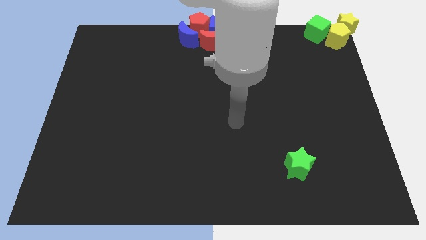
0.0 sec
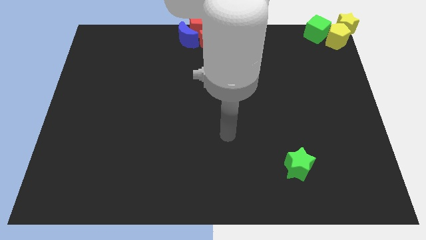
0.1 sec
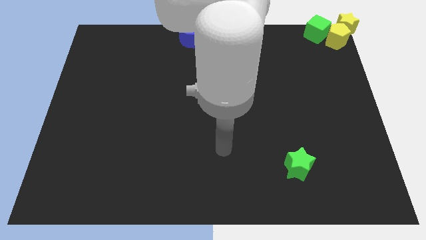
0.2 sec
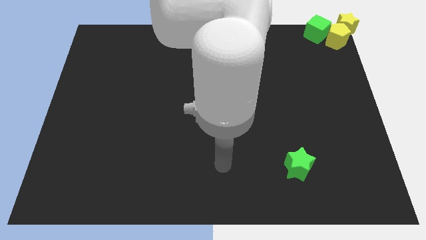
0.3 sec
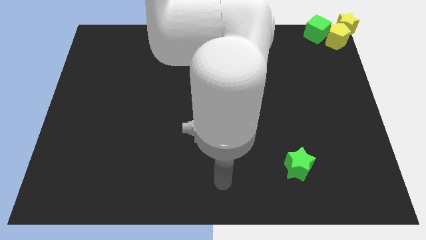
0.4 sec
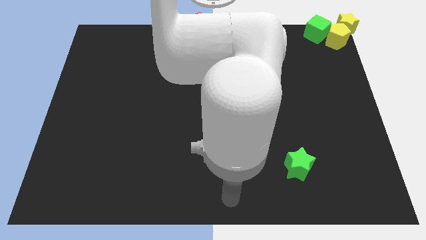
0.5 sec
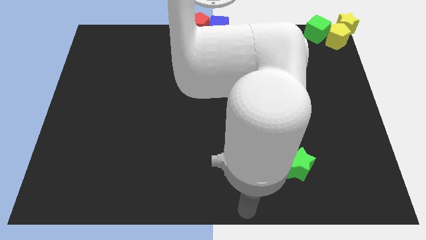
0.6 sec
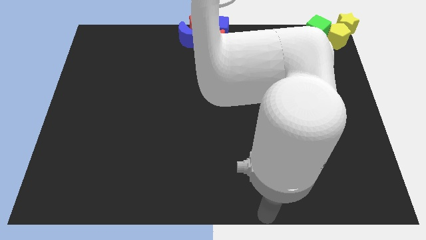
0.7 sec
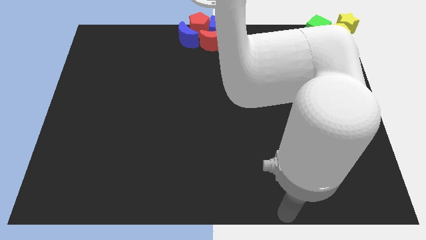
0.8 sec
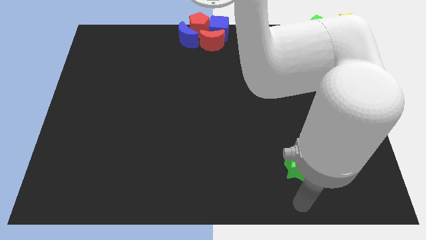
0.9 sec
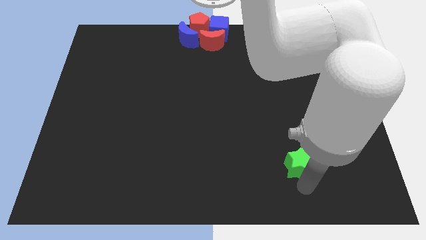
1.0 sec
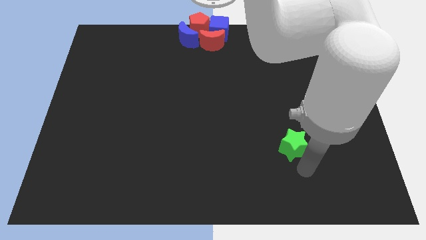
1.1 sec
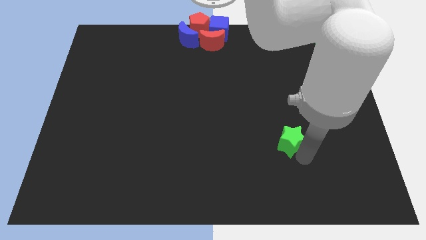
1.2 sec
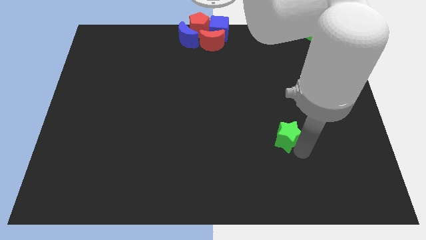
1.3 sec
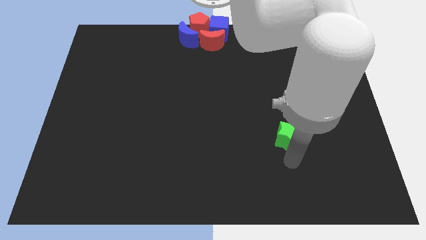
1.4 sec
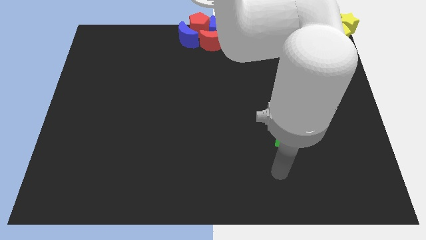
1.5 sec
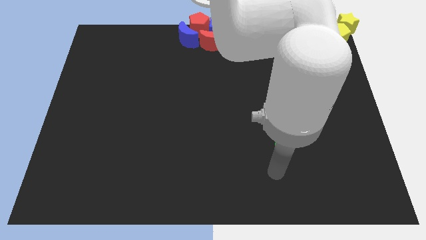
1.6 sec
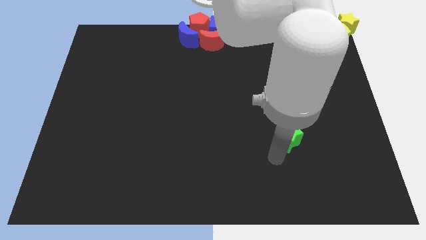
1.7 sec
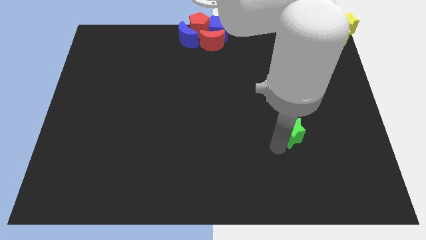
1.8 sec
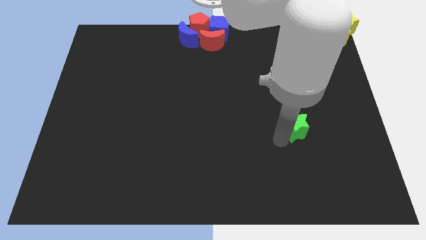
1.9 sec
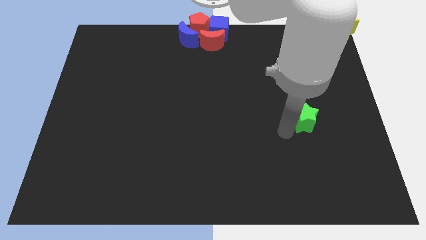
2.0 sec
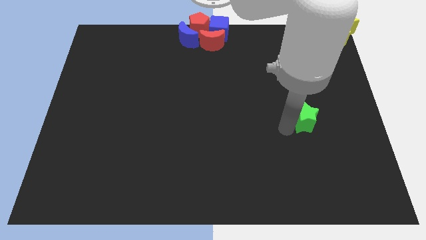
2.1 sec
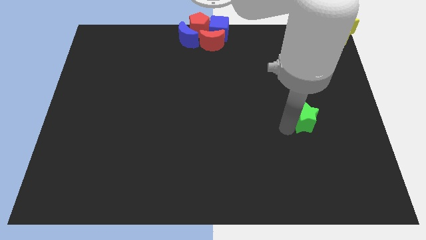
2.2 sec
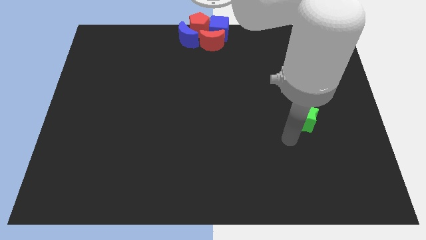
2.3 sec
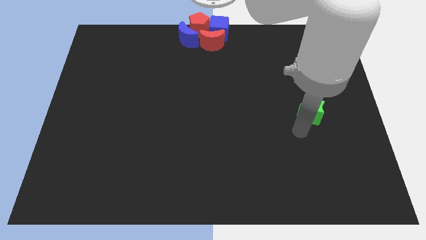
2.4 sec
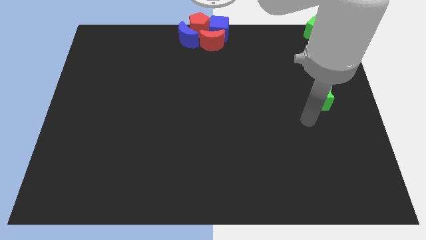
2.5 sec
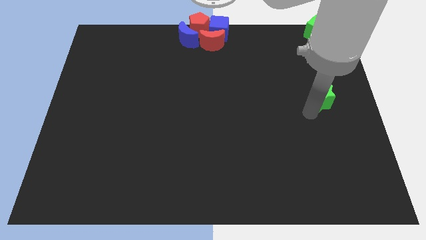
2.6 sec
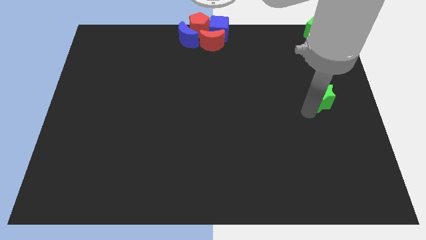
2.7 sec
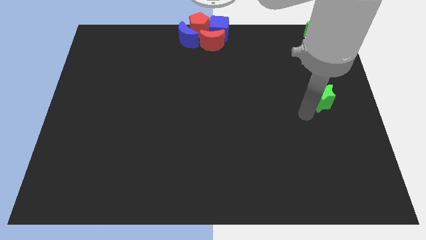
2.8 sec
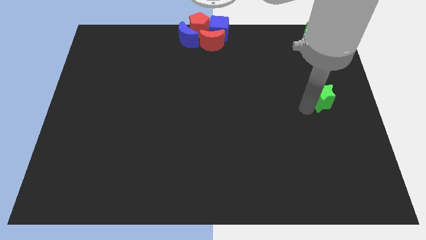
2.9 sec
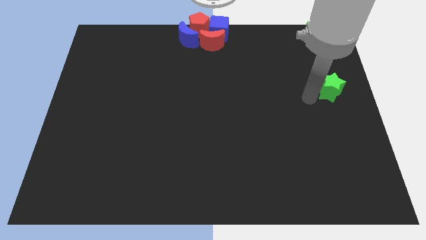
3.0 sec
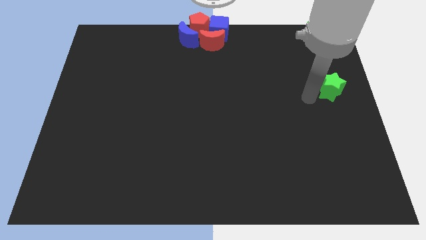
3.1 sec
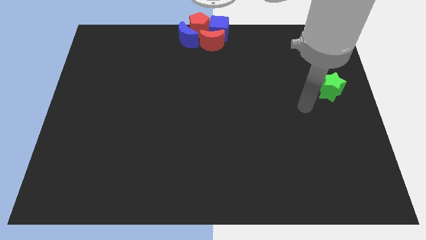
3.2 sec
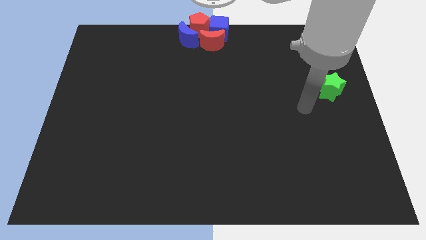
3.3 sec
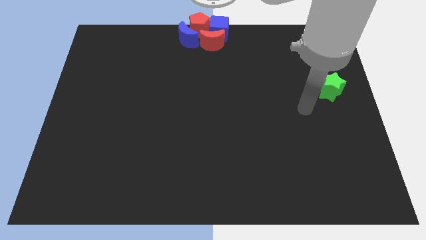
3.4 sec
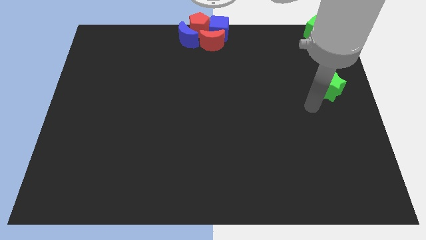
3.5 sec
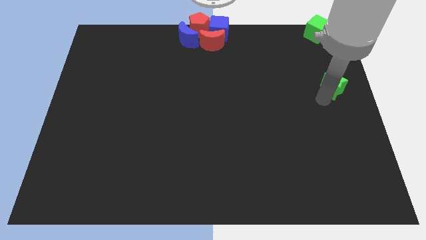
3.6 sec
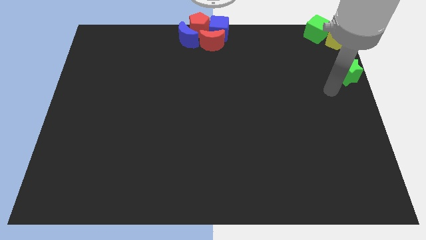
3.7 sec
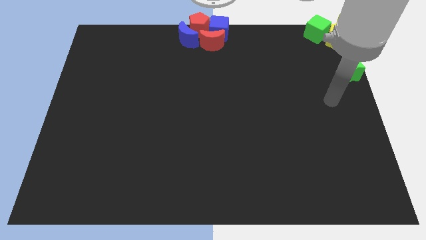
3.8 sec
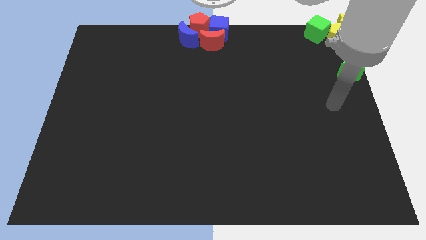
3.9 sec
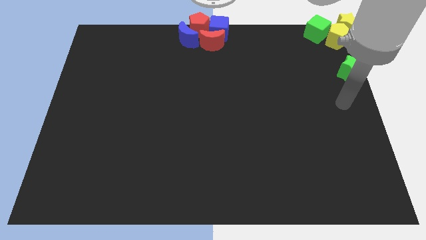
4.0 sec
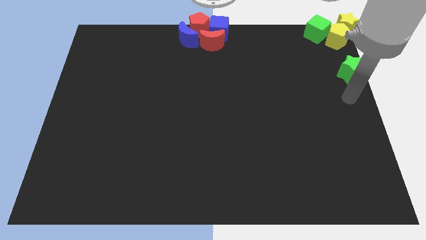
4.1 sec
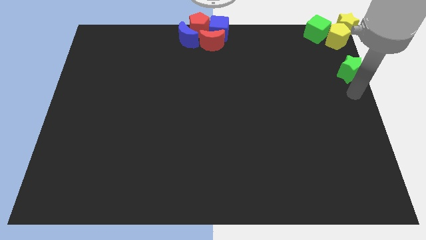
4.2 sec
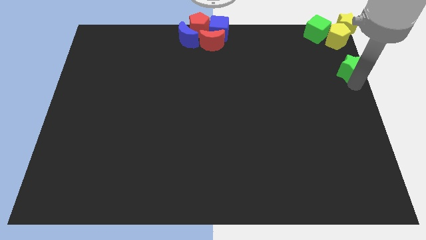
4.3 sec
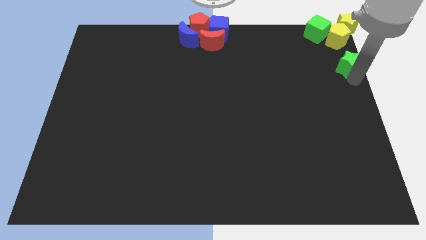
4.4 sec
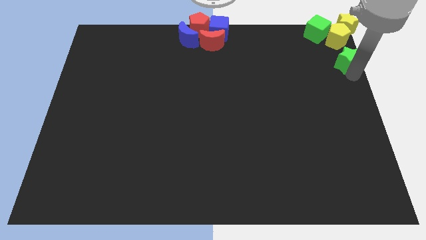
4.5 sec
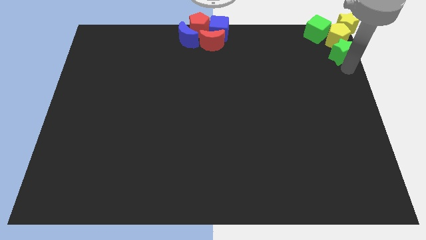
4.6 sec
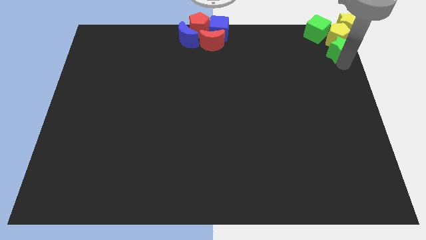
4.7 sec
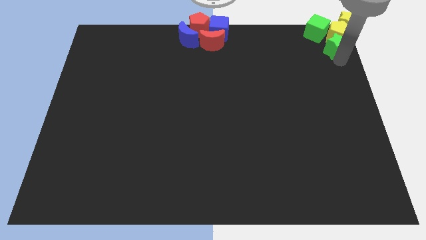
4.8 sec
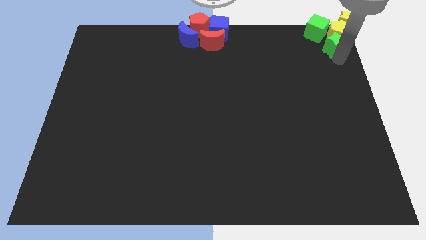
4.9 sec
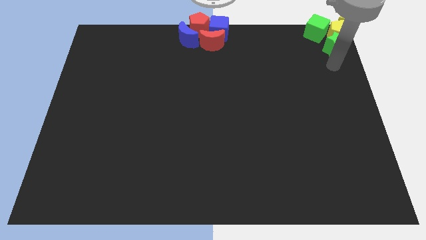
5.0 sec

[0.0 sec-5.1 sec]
move the green star into bottom of yellow pentagon

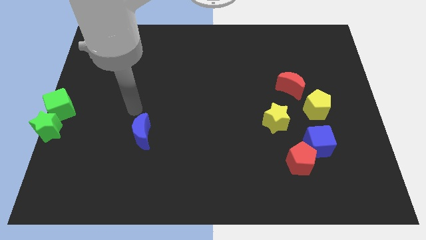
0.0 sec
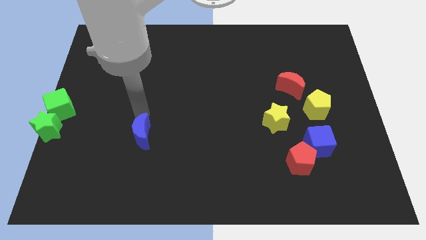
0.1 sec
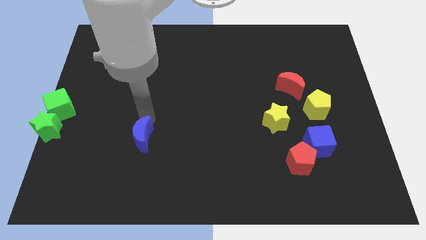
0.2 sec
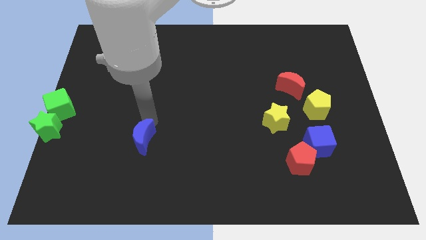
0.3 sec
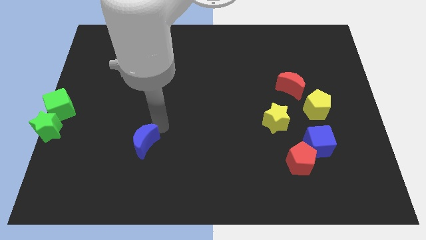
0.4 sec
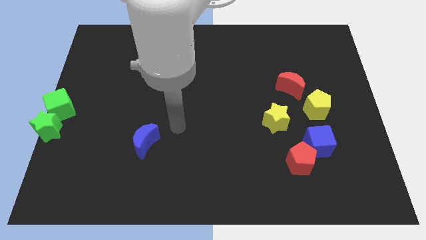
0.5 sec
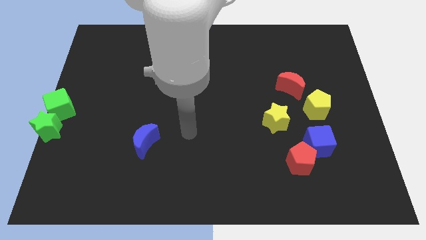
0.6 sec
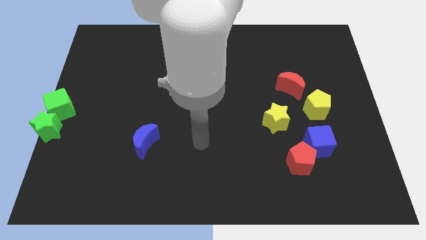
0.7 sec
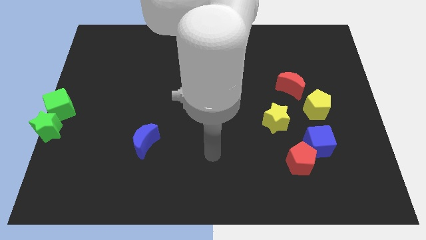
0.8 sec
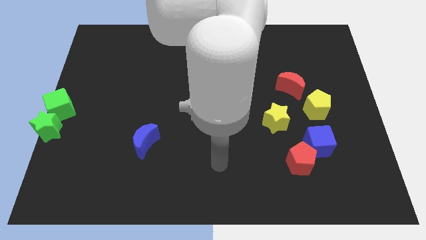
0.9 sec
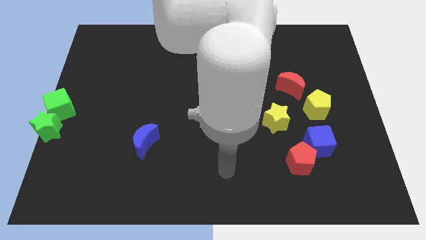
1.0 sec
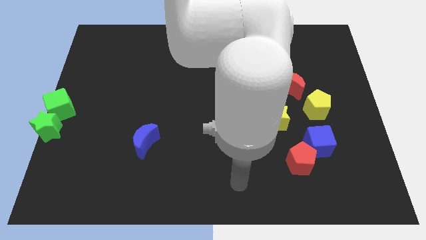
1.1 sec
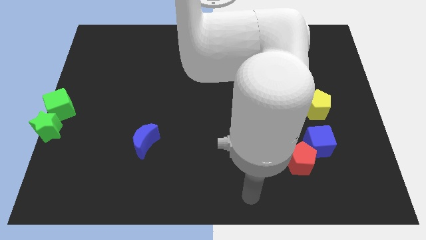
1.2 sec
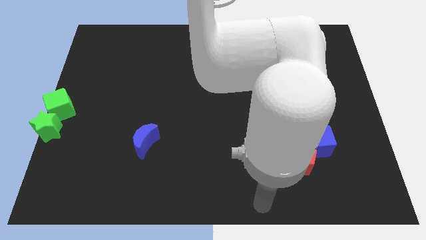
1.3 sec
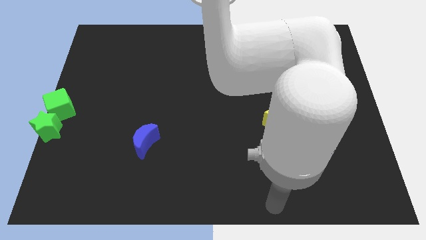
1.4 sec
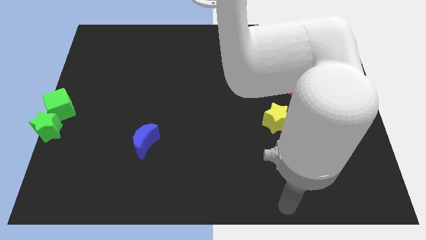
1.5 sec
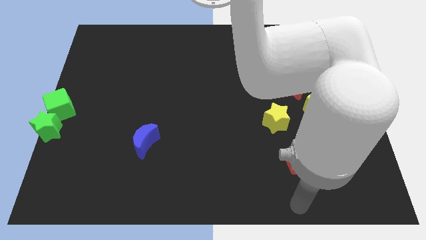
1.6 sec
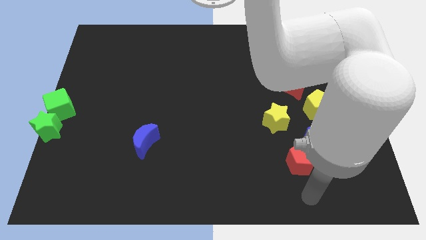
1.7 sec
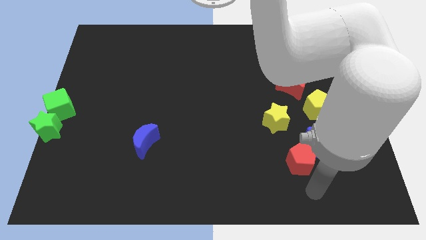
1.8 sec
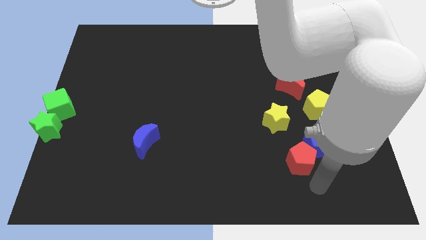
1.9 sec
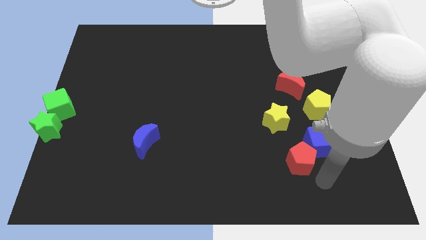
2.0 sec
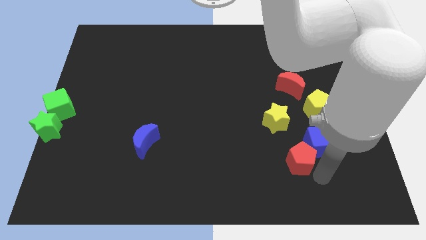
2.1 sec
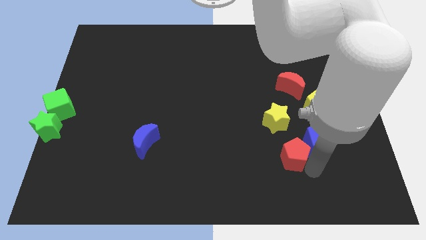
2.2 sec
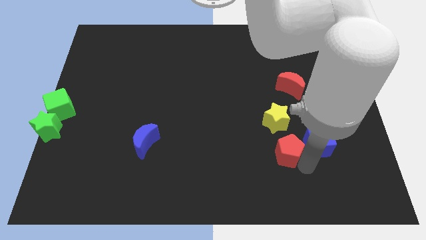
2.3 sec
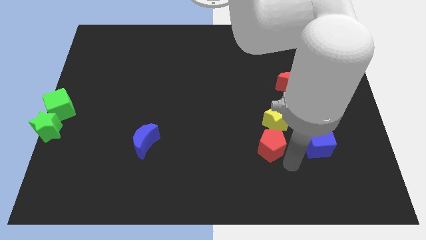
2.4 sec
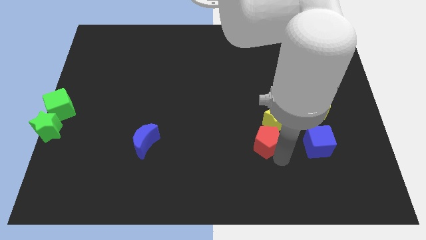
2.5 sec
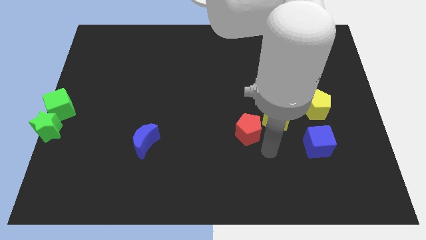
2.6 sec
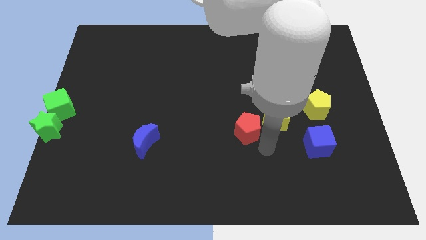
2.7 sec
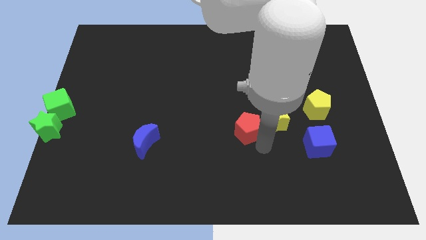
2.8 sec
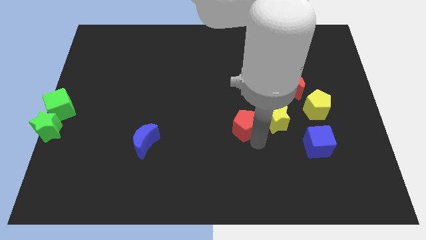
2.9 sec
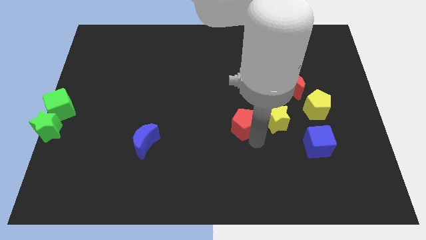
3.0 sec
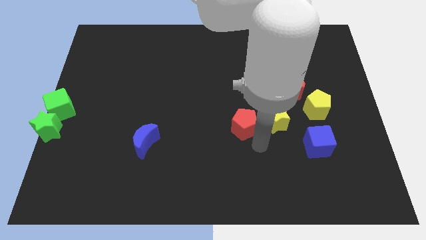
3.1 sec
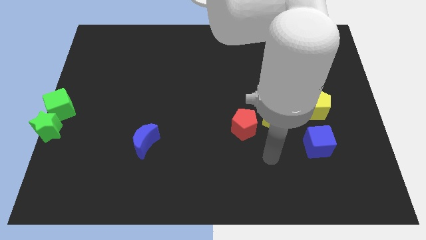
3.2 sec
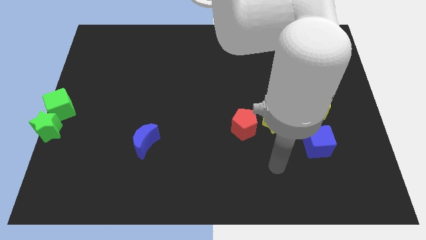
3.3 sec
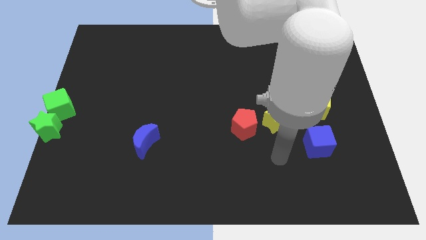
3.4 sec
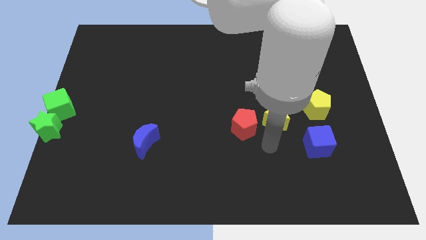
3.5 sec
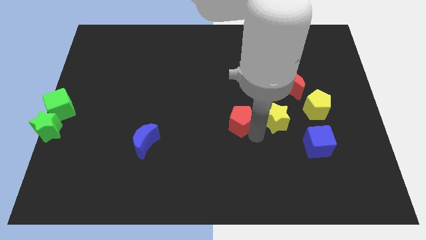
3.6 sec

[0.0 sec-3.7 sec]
move the red pentagon left to the yellow star

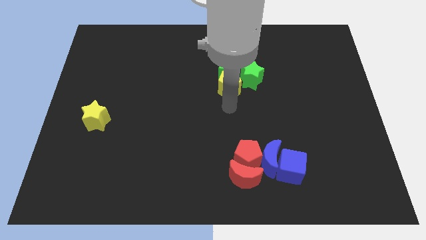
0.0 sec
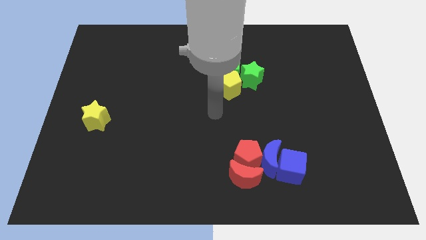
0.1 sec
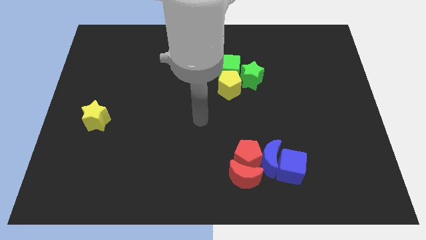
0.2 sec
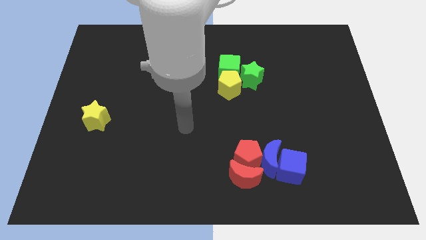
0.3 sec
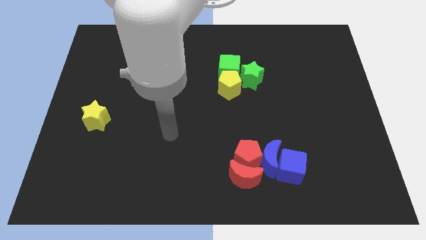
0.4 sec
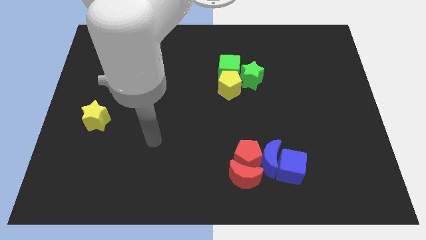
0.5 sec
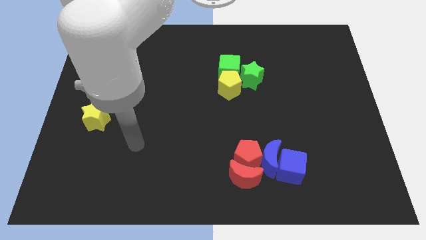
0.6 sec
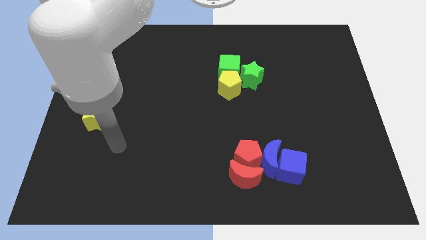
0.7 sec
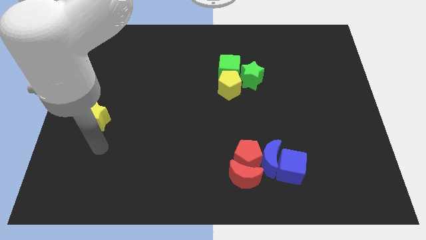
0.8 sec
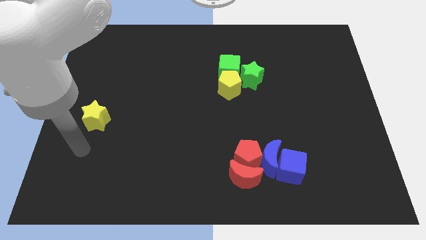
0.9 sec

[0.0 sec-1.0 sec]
point your arm at the bottom of the yellow star
